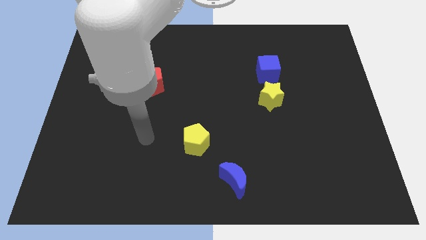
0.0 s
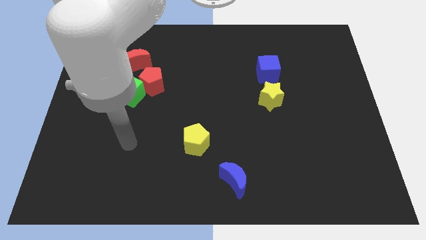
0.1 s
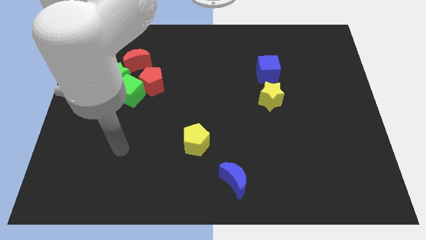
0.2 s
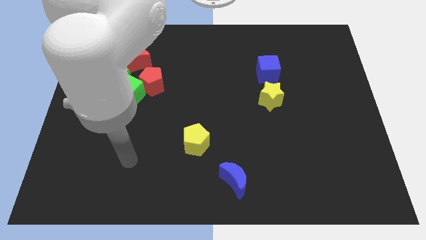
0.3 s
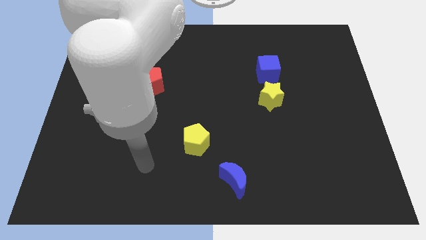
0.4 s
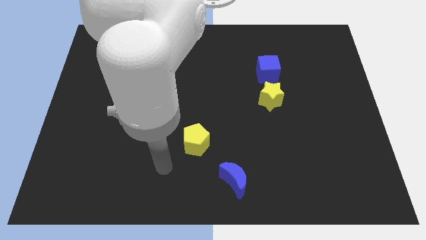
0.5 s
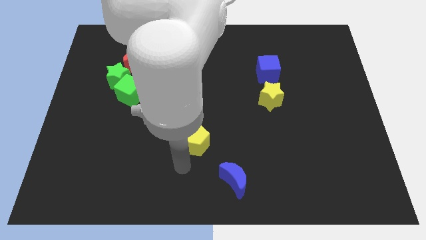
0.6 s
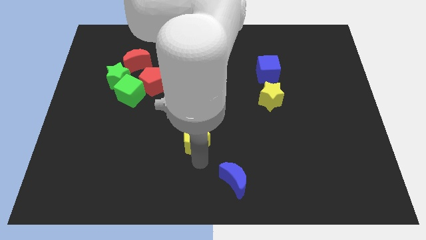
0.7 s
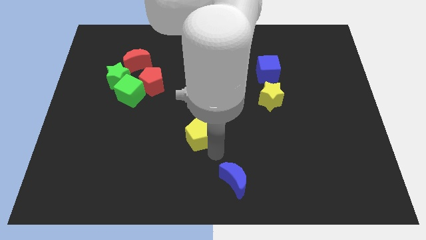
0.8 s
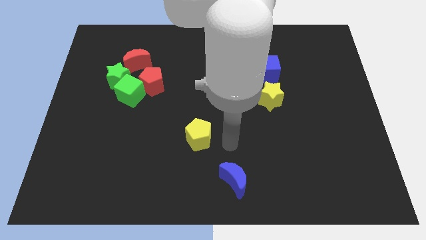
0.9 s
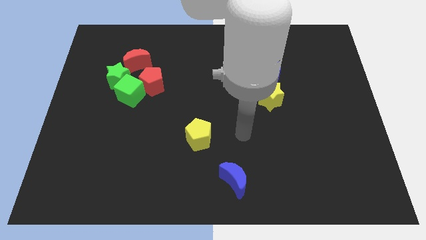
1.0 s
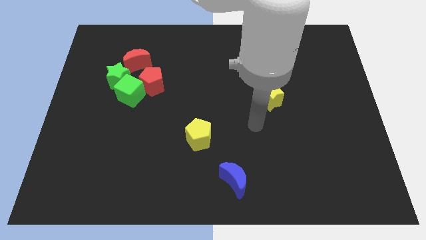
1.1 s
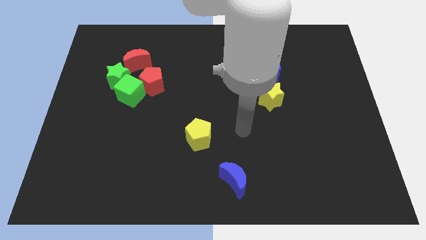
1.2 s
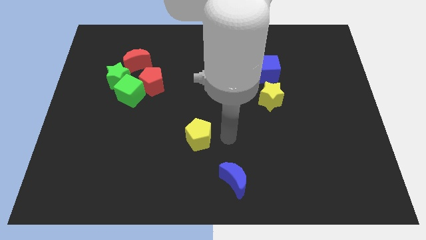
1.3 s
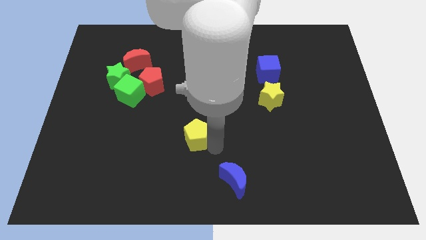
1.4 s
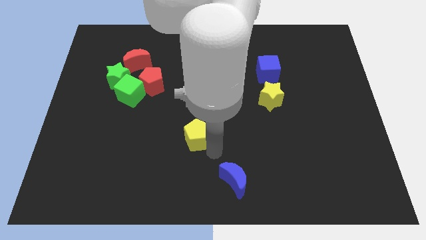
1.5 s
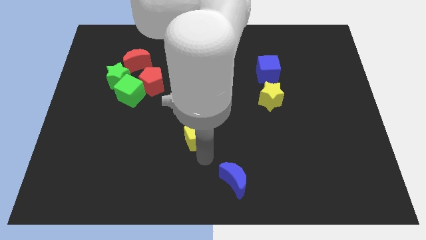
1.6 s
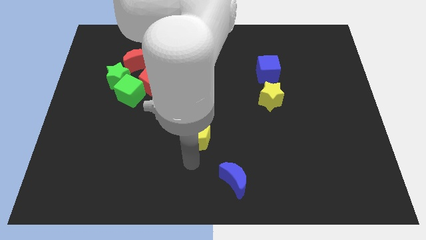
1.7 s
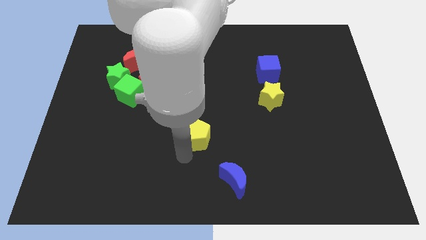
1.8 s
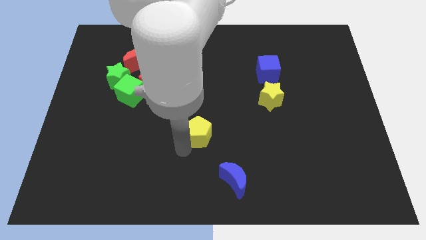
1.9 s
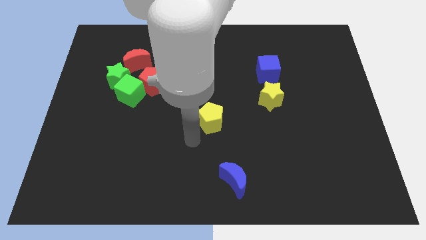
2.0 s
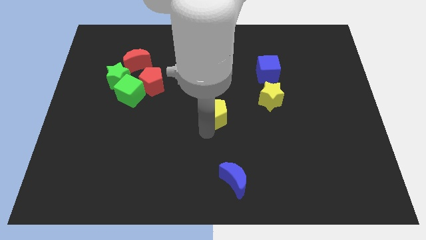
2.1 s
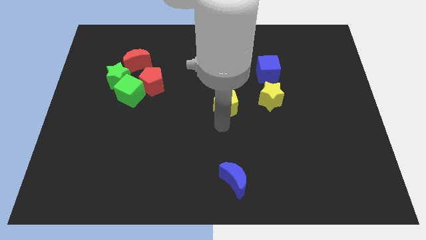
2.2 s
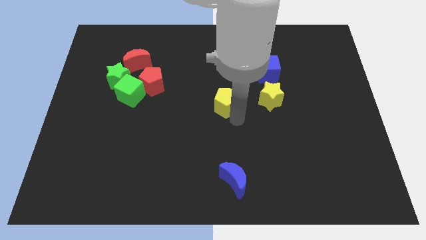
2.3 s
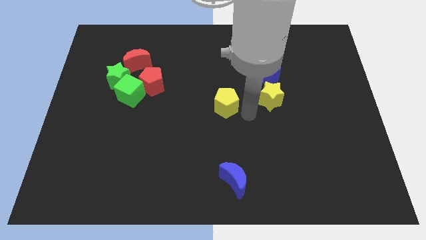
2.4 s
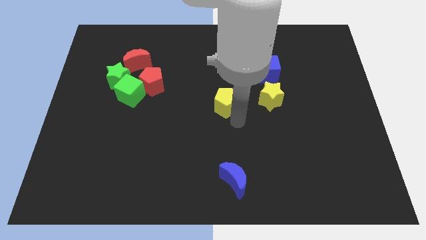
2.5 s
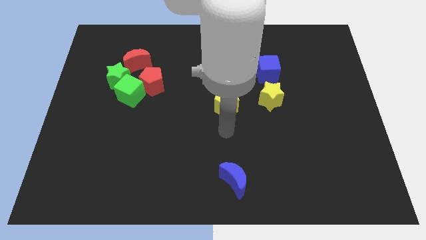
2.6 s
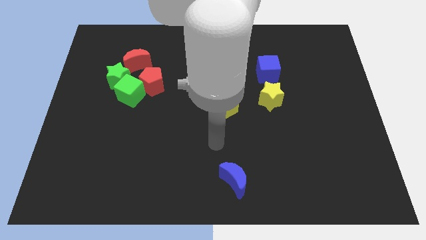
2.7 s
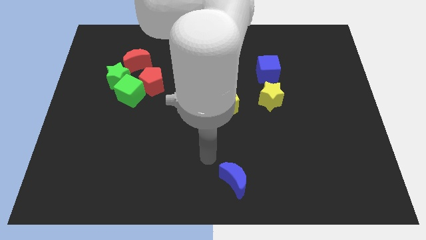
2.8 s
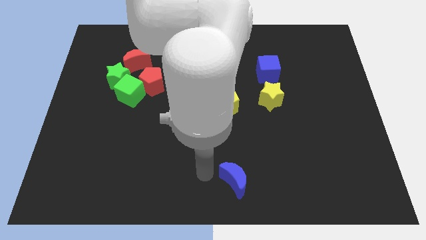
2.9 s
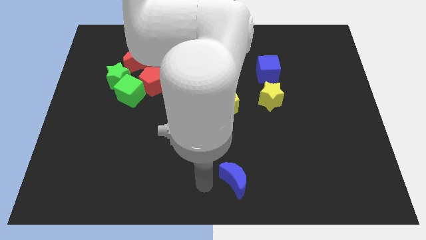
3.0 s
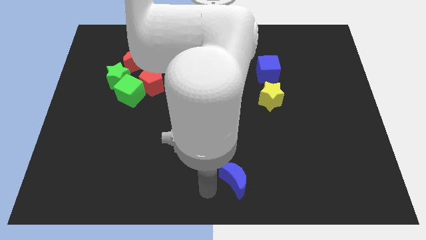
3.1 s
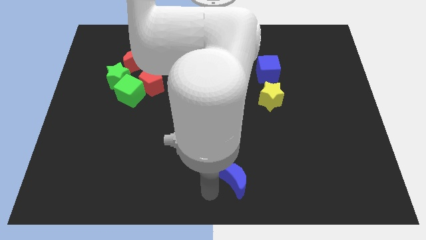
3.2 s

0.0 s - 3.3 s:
place the yellow pentagon parallel to yellow star

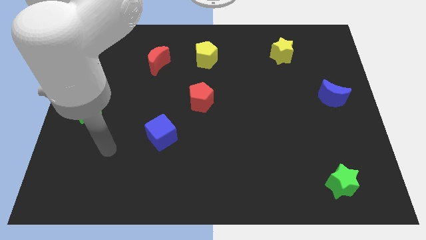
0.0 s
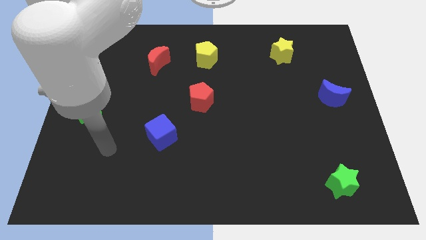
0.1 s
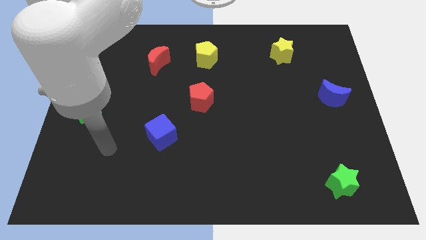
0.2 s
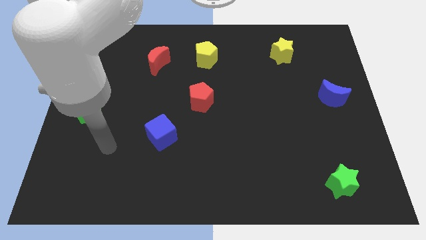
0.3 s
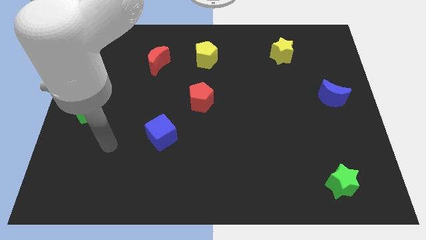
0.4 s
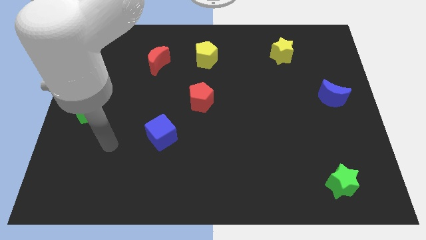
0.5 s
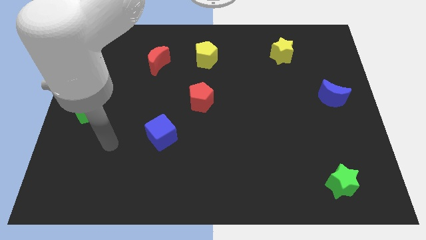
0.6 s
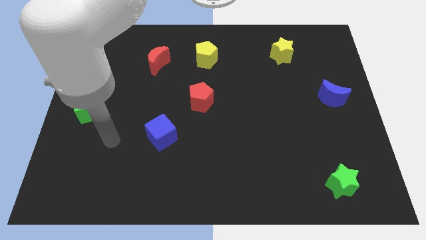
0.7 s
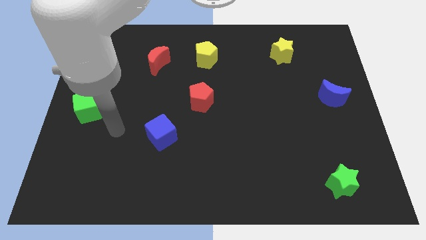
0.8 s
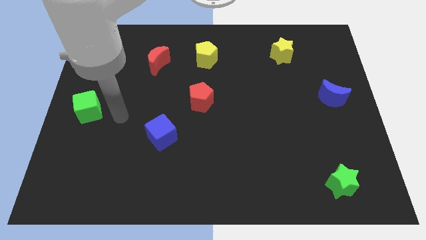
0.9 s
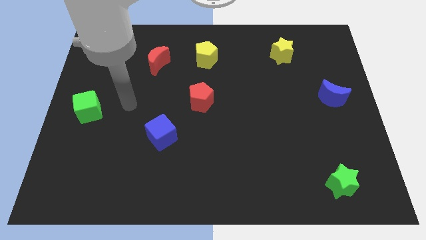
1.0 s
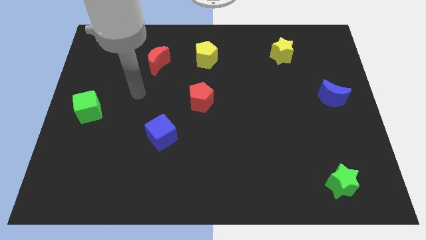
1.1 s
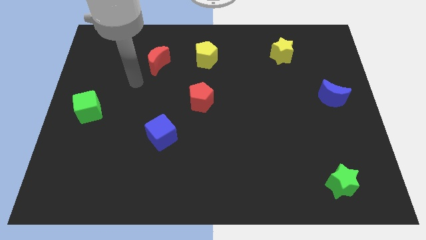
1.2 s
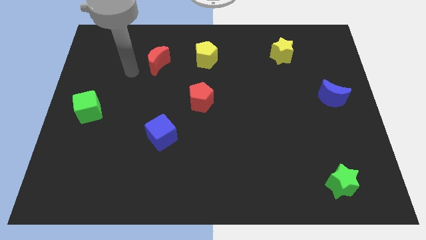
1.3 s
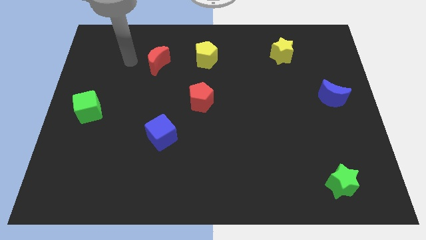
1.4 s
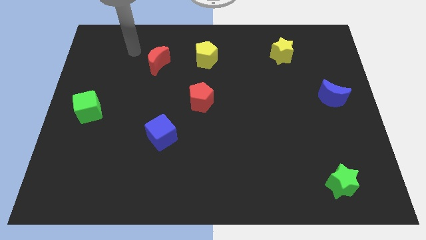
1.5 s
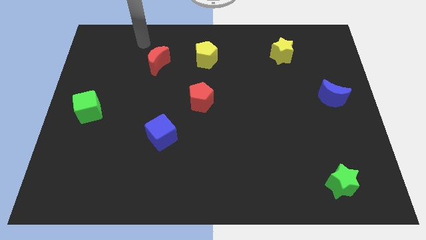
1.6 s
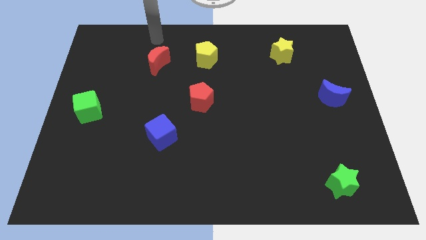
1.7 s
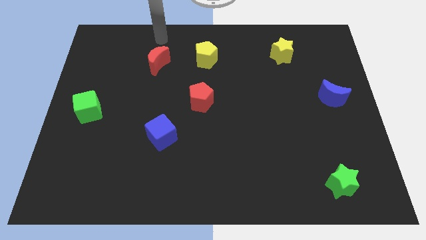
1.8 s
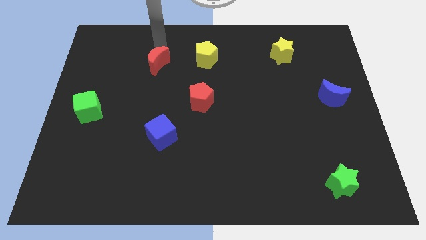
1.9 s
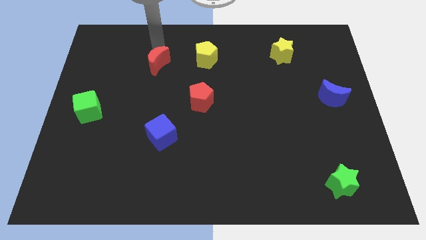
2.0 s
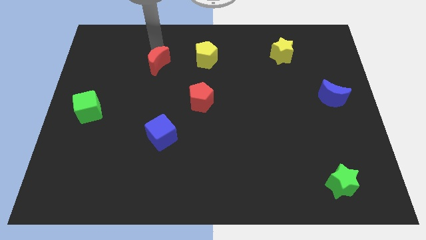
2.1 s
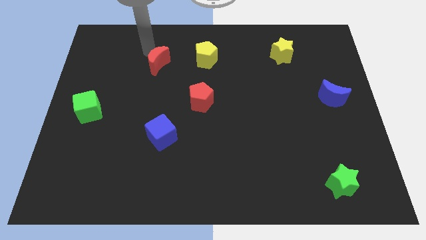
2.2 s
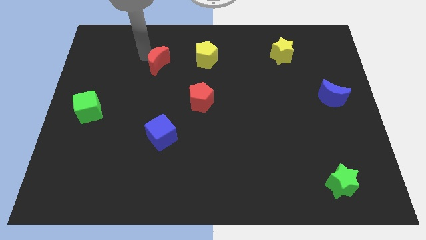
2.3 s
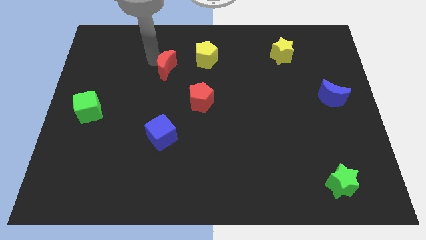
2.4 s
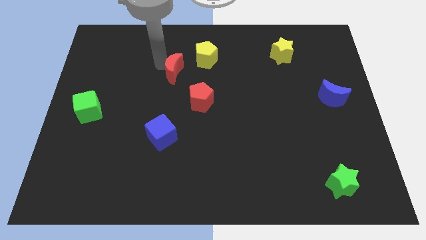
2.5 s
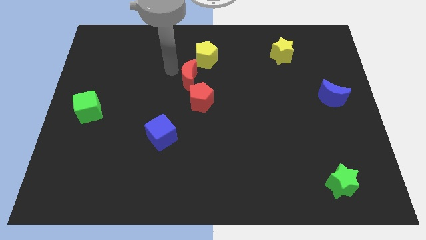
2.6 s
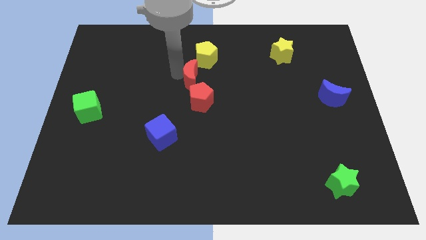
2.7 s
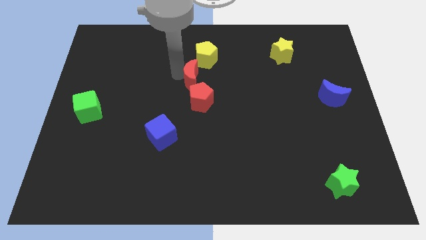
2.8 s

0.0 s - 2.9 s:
move the red moon to the top left side of the red pentagon

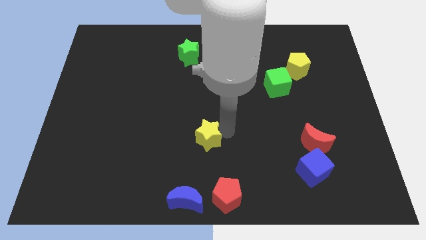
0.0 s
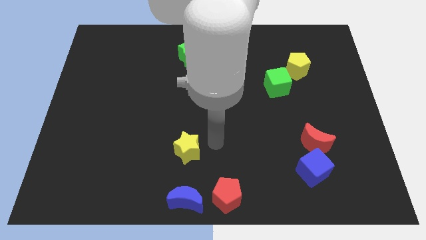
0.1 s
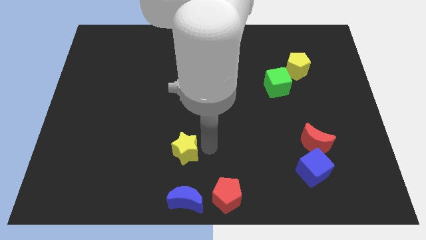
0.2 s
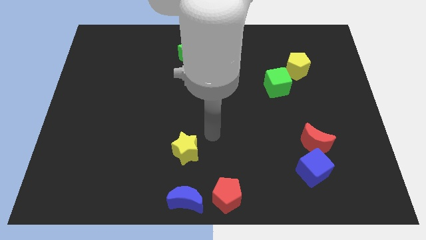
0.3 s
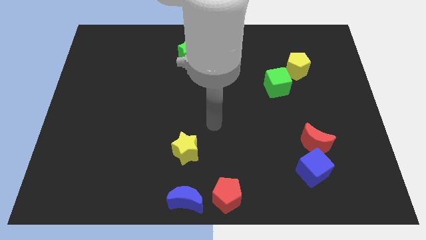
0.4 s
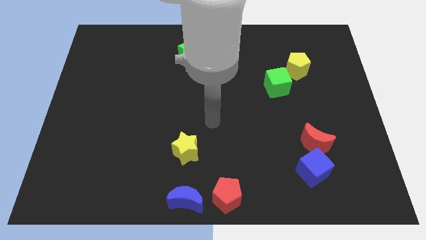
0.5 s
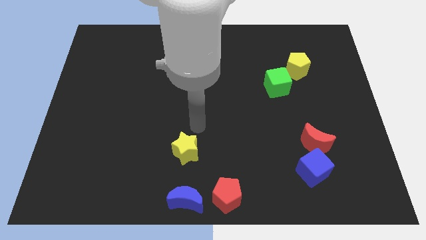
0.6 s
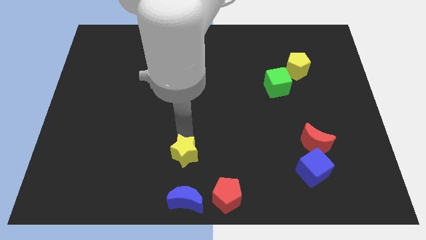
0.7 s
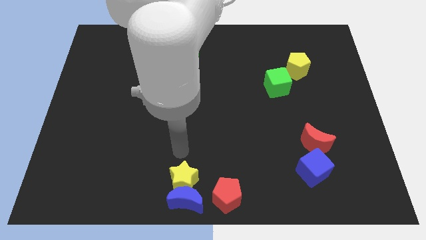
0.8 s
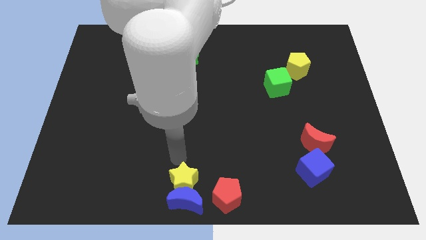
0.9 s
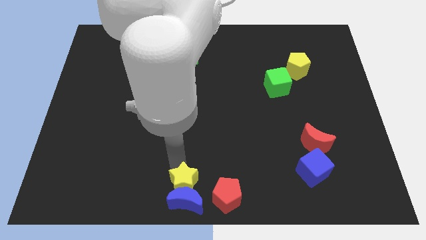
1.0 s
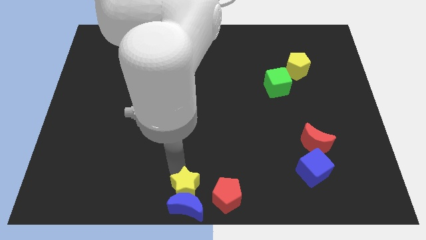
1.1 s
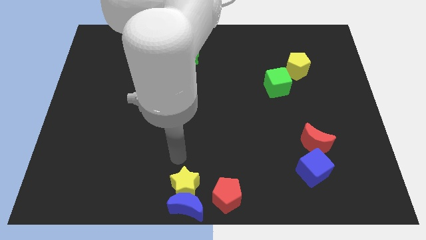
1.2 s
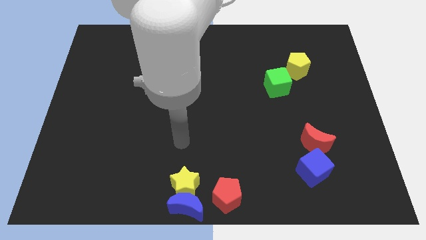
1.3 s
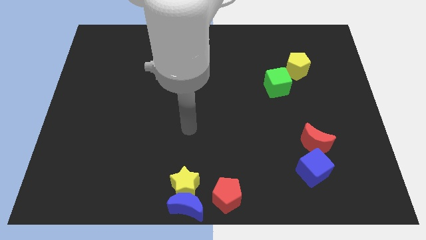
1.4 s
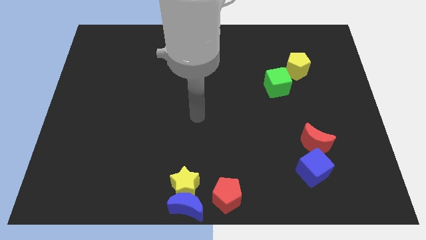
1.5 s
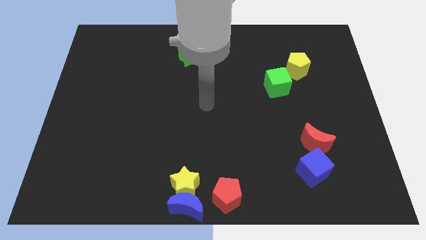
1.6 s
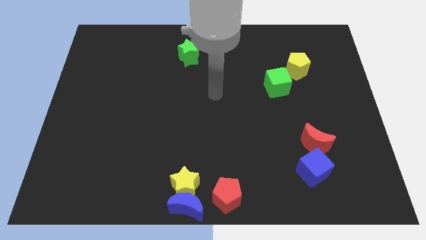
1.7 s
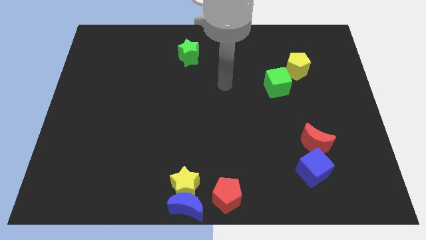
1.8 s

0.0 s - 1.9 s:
move the yellow star to the top of the blue crescent

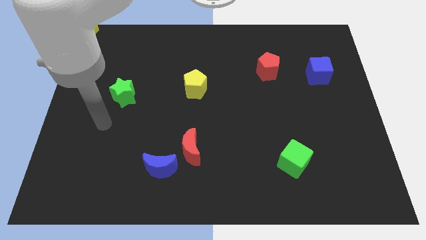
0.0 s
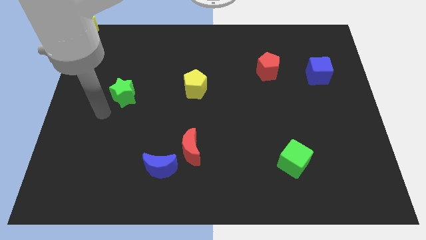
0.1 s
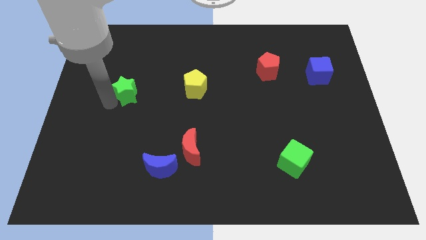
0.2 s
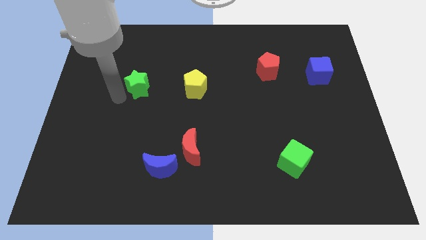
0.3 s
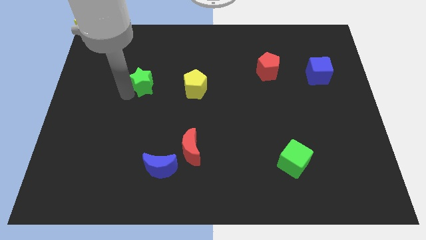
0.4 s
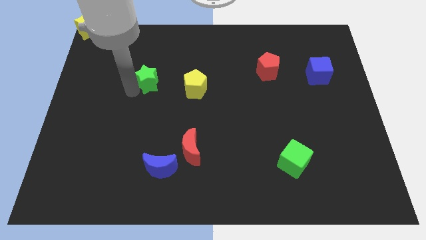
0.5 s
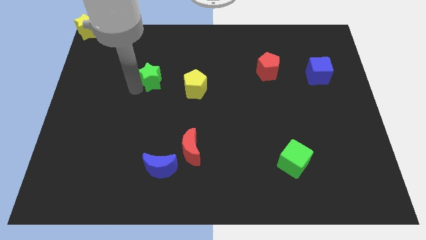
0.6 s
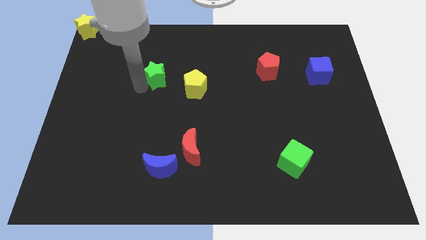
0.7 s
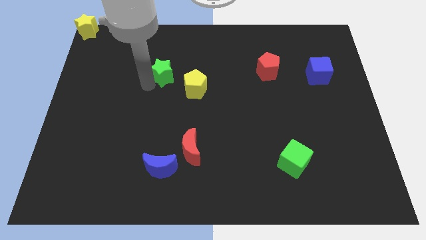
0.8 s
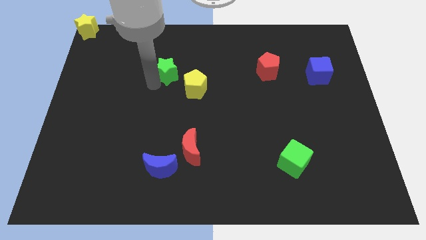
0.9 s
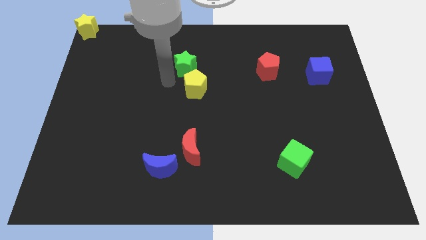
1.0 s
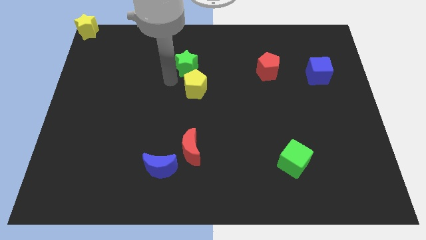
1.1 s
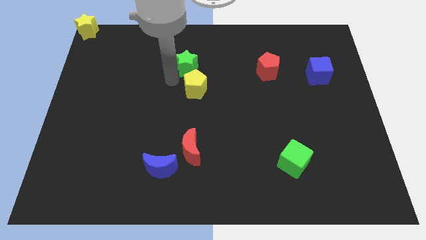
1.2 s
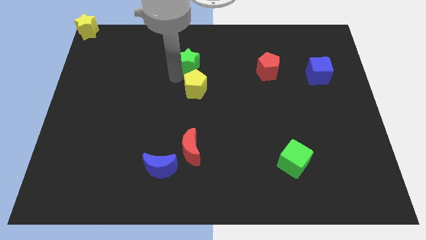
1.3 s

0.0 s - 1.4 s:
place green star to the top of yellow pentagon
